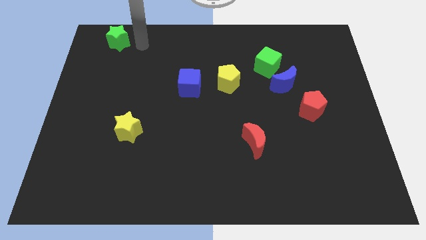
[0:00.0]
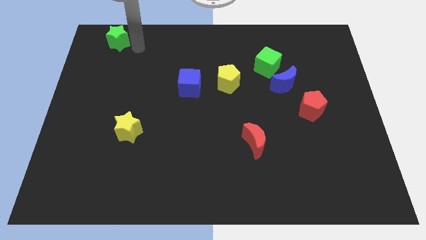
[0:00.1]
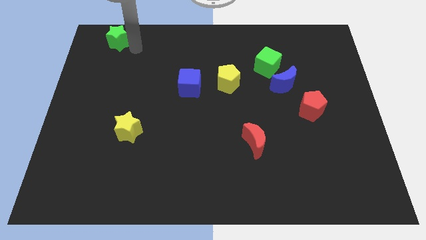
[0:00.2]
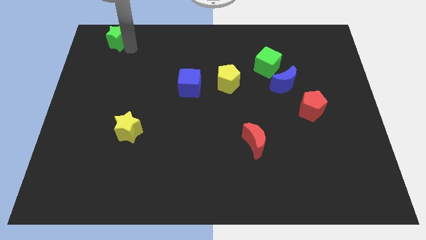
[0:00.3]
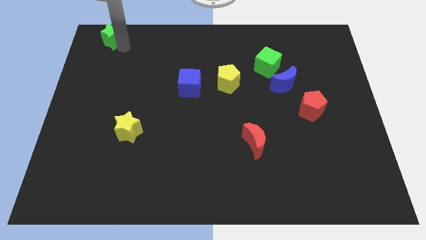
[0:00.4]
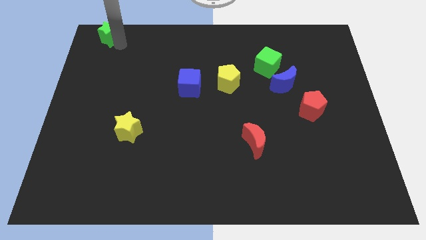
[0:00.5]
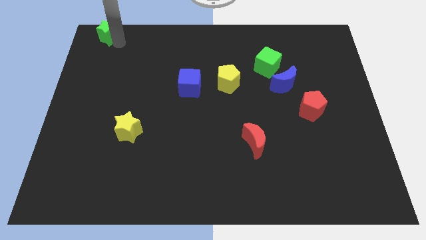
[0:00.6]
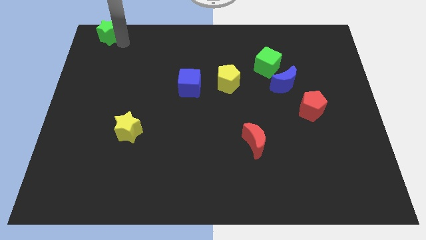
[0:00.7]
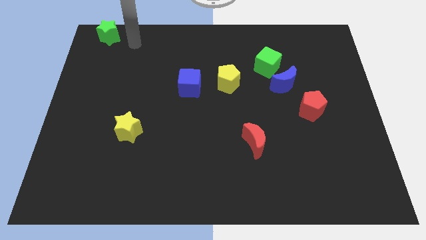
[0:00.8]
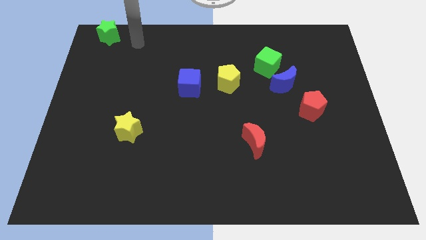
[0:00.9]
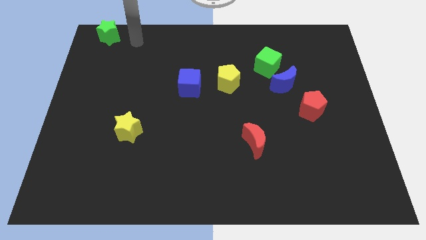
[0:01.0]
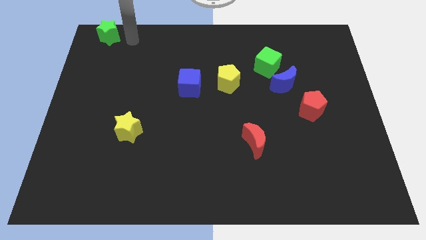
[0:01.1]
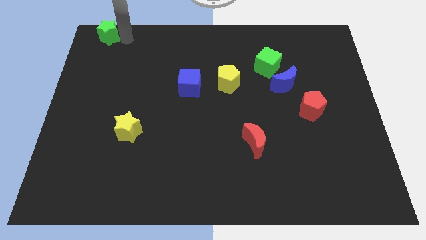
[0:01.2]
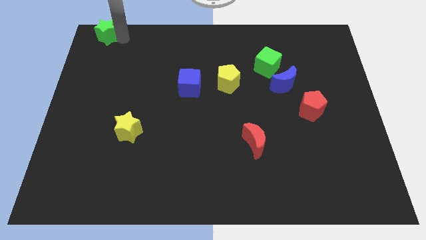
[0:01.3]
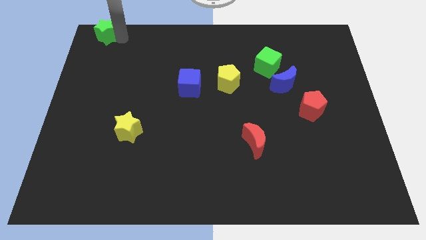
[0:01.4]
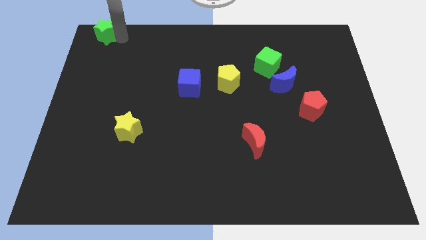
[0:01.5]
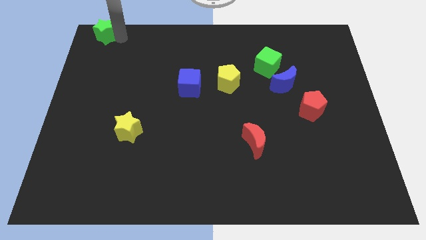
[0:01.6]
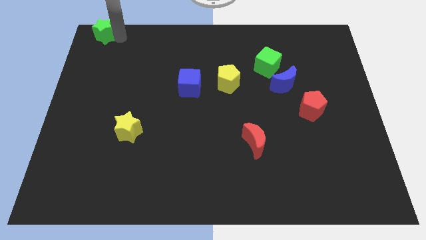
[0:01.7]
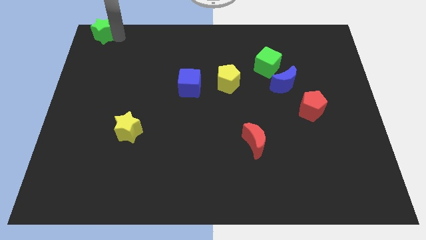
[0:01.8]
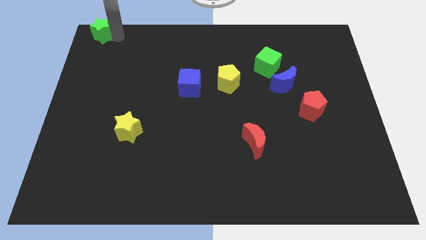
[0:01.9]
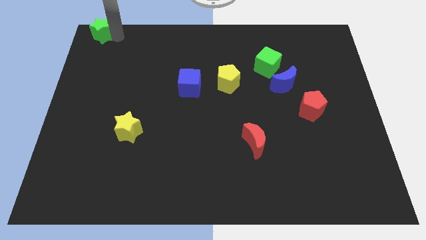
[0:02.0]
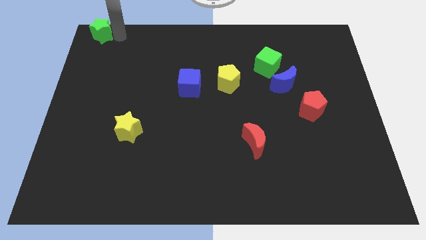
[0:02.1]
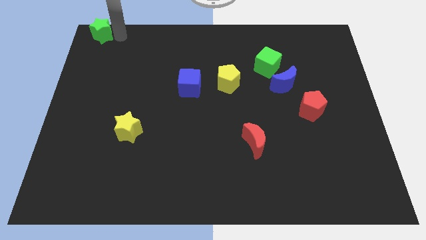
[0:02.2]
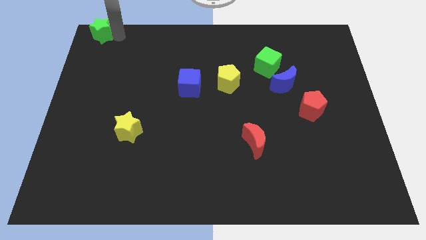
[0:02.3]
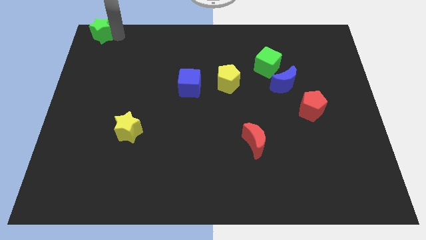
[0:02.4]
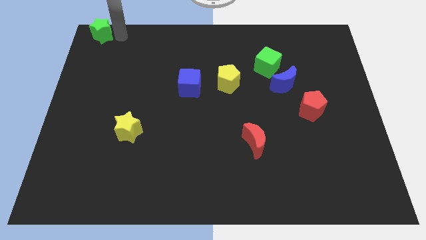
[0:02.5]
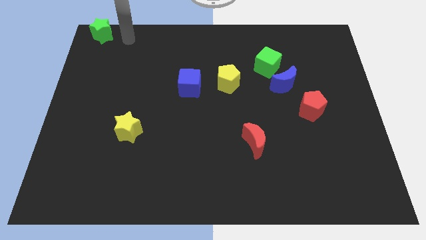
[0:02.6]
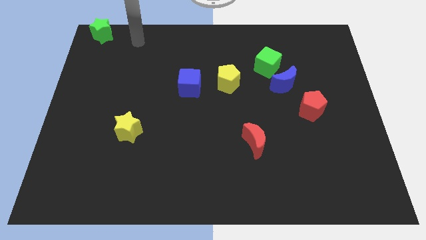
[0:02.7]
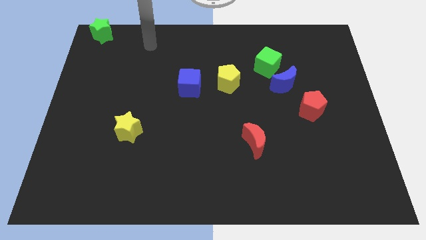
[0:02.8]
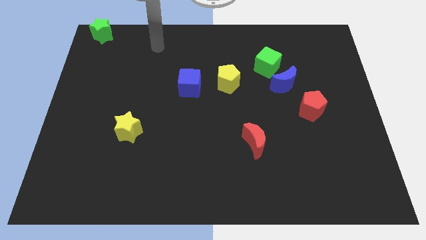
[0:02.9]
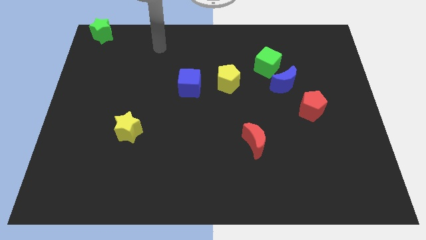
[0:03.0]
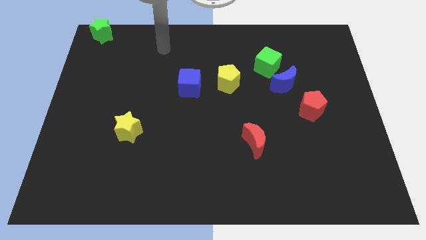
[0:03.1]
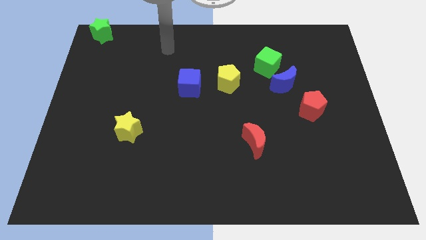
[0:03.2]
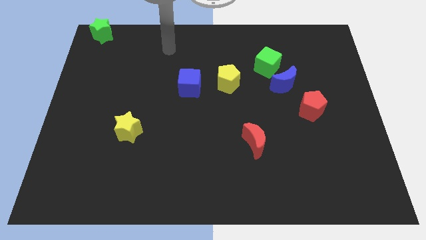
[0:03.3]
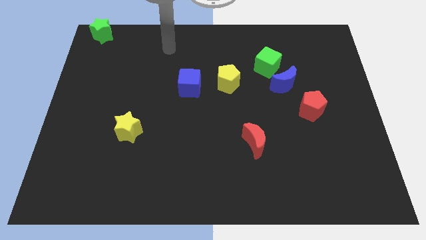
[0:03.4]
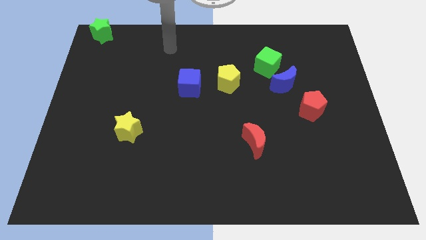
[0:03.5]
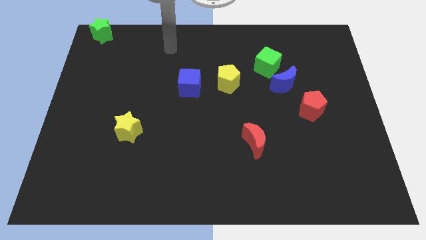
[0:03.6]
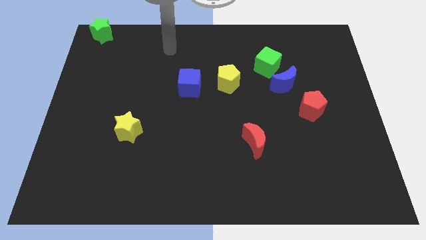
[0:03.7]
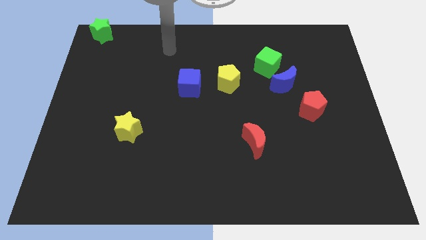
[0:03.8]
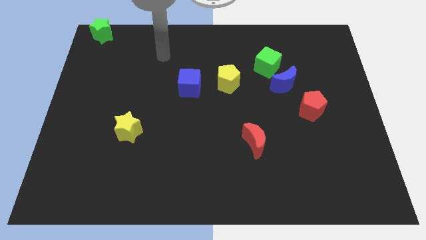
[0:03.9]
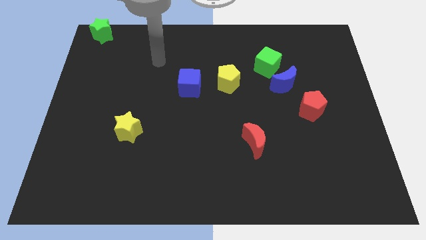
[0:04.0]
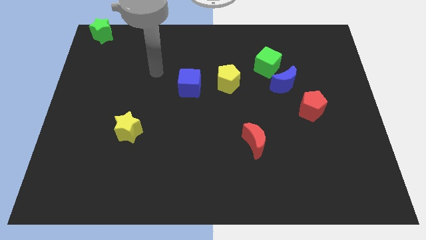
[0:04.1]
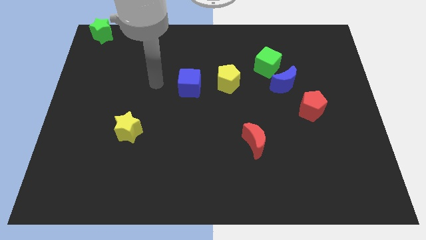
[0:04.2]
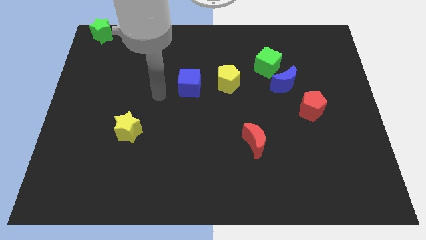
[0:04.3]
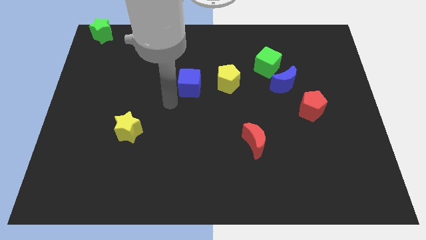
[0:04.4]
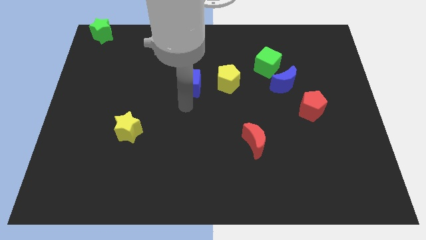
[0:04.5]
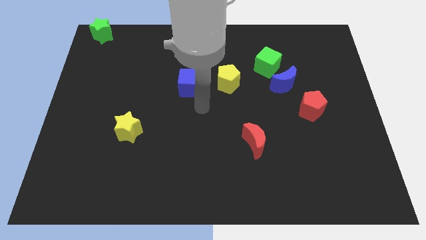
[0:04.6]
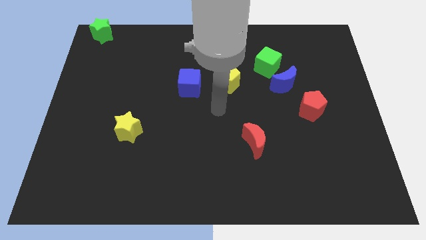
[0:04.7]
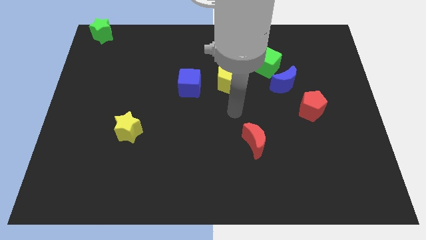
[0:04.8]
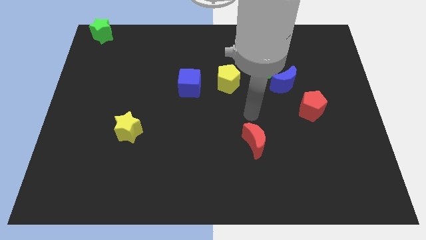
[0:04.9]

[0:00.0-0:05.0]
move the arm away from the green star

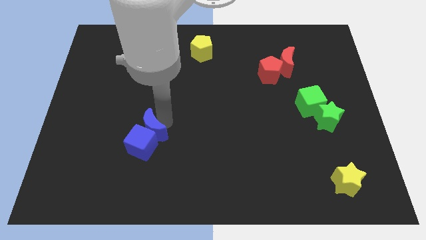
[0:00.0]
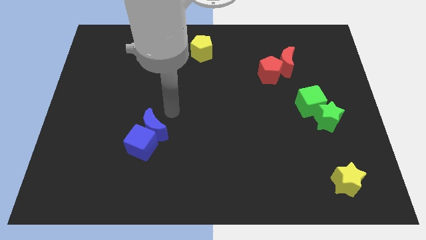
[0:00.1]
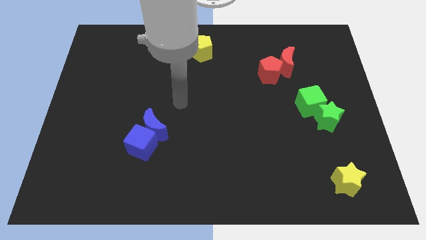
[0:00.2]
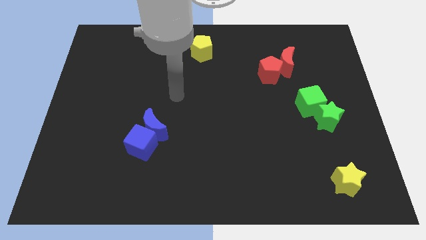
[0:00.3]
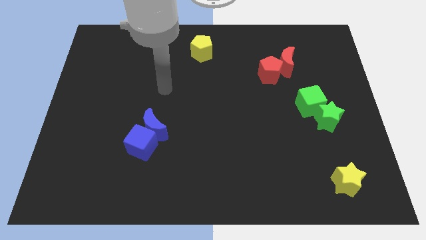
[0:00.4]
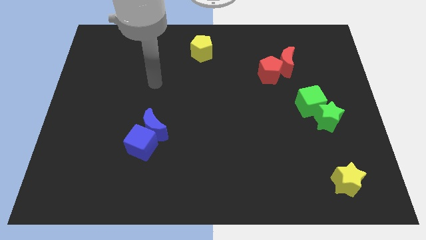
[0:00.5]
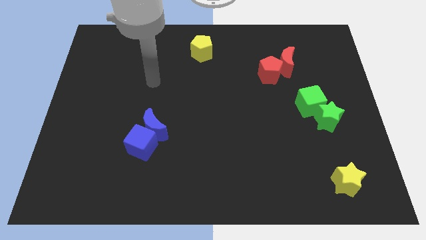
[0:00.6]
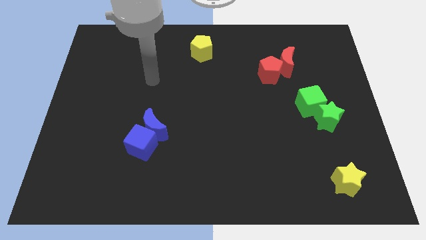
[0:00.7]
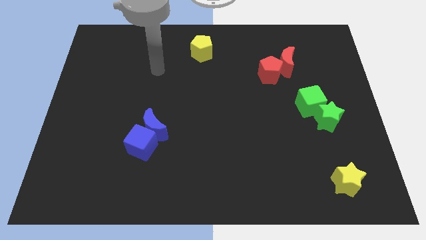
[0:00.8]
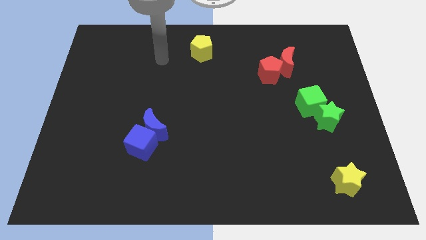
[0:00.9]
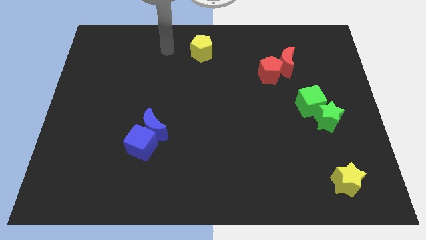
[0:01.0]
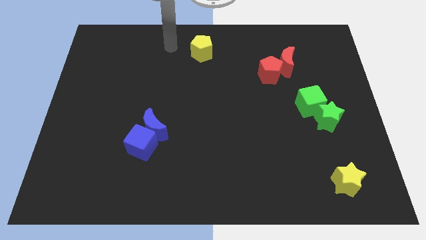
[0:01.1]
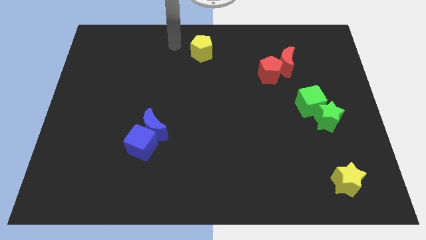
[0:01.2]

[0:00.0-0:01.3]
point your arm at the left of the yellow pentagon

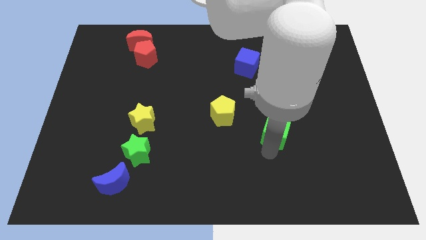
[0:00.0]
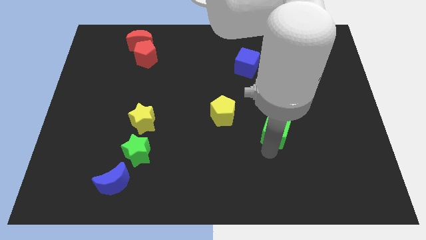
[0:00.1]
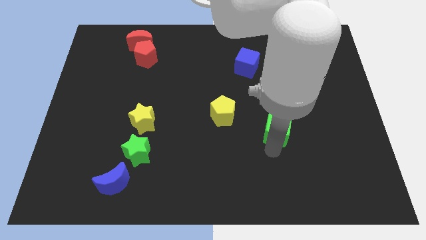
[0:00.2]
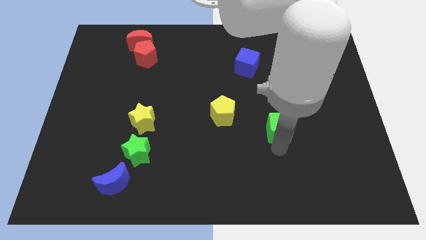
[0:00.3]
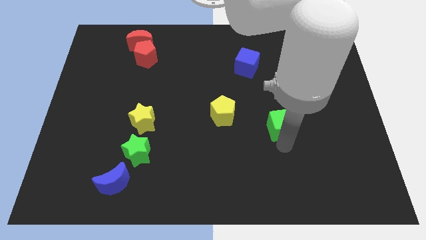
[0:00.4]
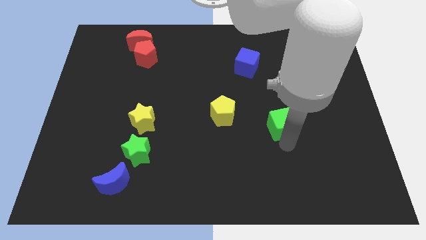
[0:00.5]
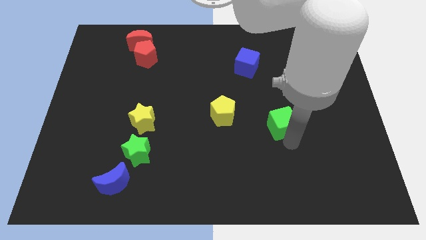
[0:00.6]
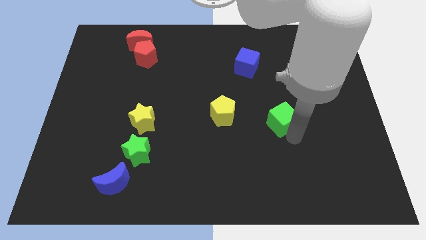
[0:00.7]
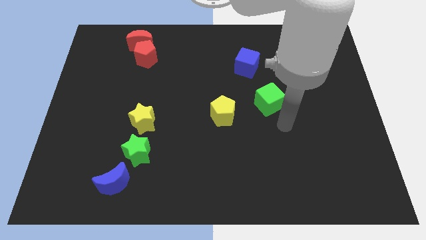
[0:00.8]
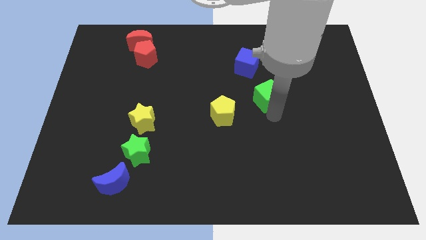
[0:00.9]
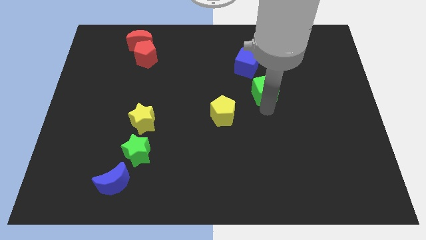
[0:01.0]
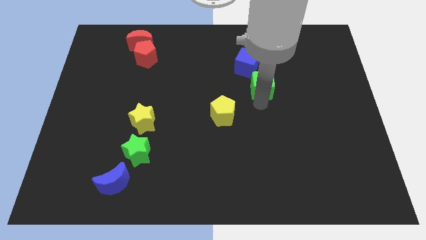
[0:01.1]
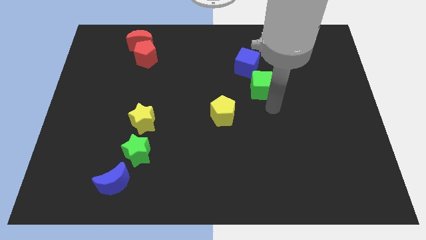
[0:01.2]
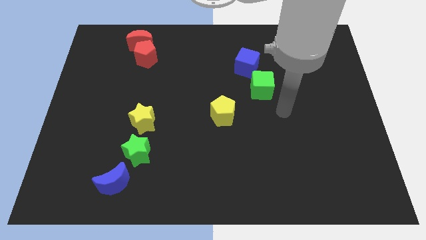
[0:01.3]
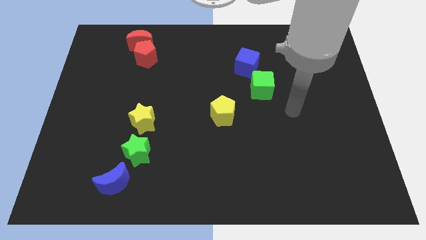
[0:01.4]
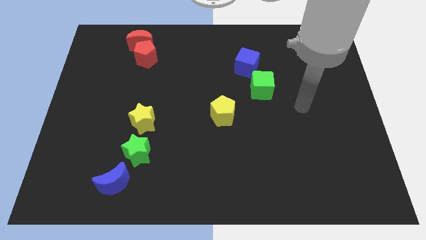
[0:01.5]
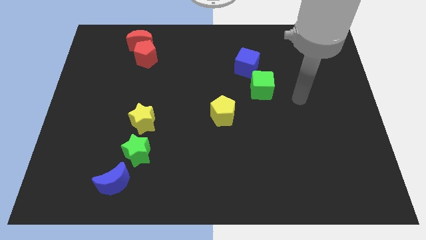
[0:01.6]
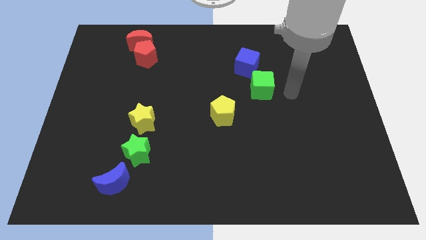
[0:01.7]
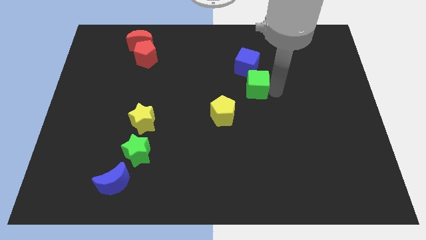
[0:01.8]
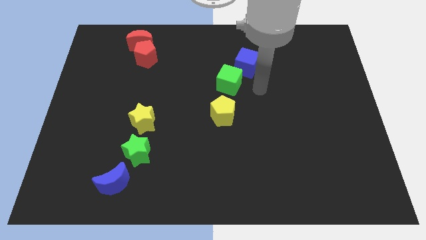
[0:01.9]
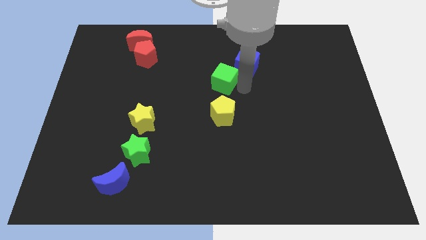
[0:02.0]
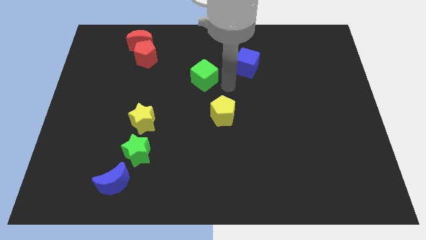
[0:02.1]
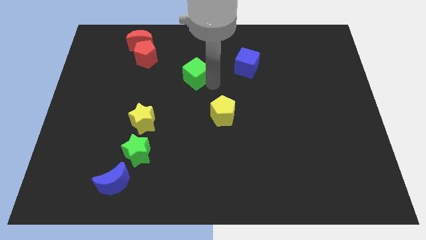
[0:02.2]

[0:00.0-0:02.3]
push the green cube to the bottom right of the red pentagon

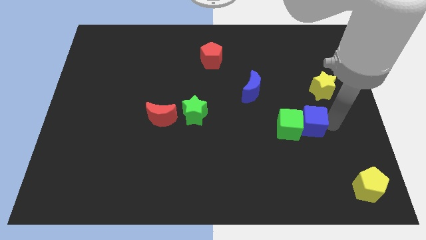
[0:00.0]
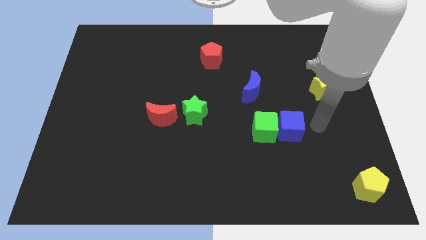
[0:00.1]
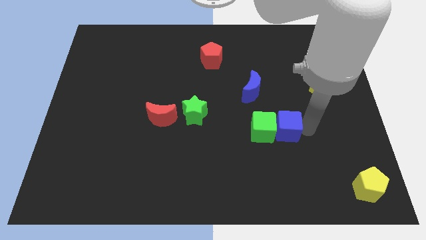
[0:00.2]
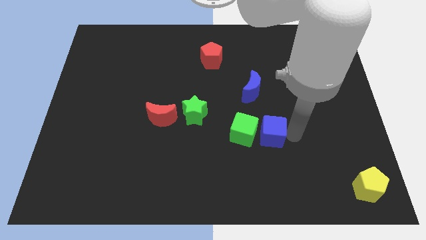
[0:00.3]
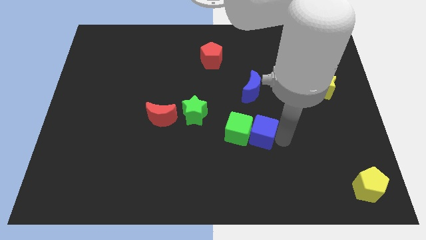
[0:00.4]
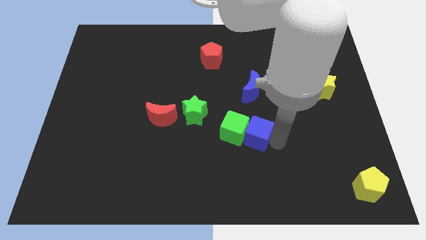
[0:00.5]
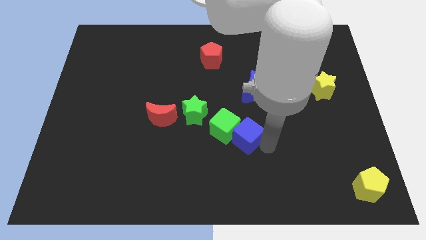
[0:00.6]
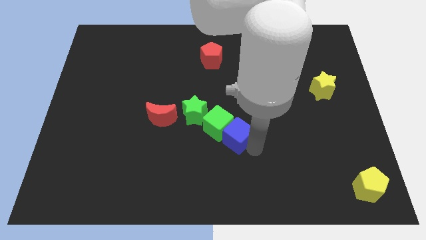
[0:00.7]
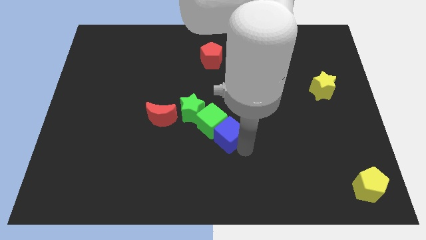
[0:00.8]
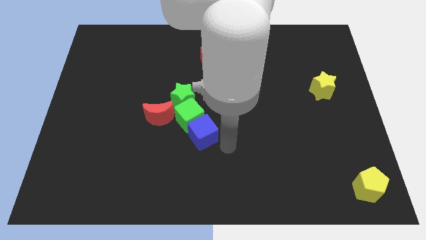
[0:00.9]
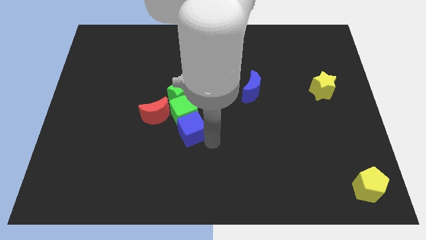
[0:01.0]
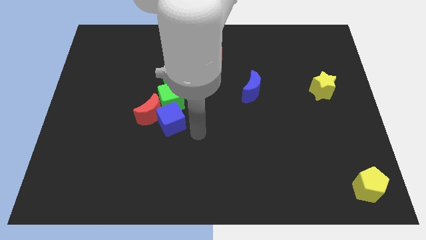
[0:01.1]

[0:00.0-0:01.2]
push the green blocks and blue cube towards the top side of the board
